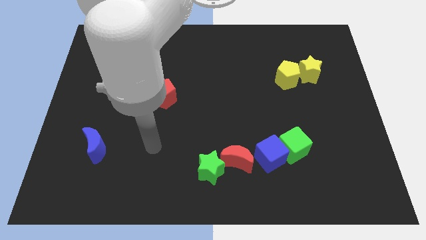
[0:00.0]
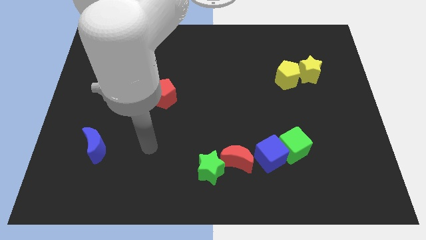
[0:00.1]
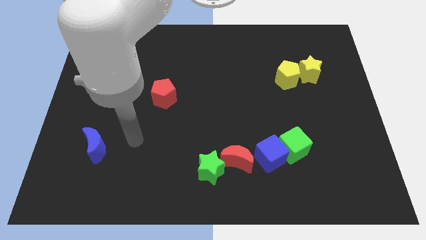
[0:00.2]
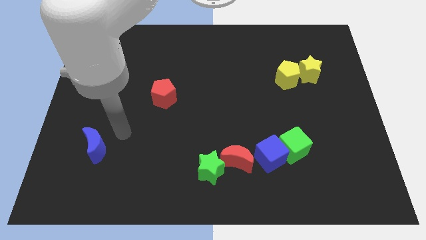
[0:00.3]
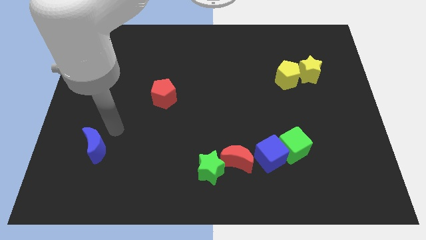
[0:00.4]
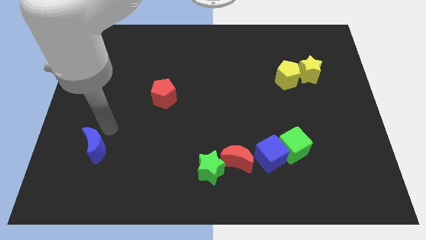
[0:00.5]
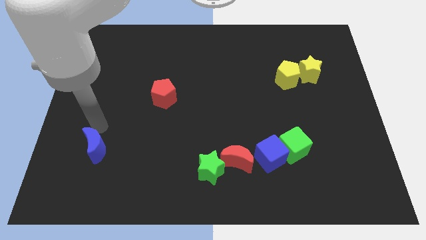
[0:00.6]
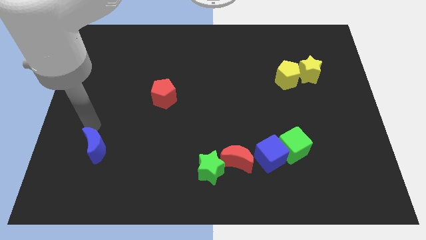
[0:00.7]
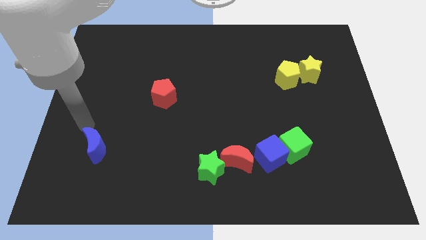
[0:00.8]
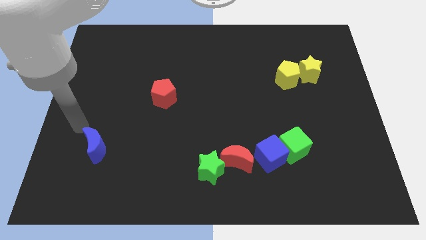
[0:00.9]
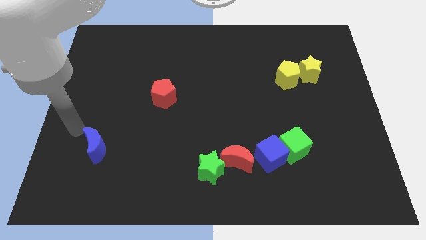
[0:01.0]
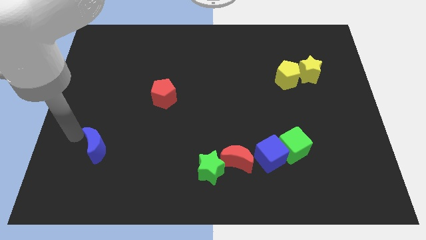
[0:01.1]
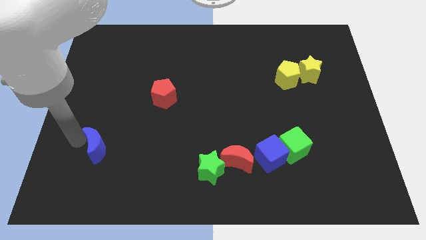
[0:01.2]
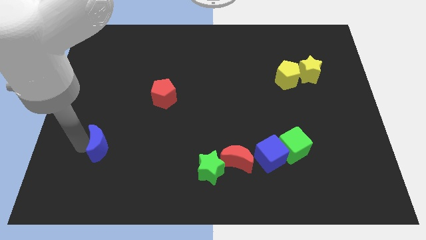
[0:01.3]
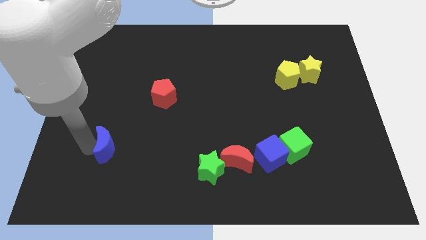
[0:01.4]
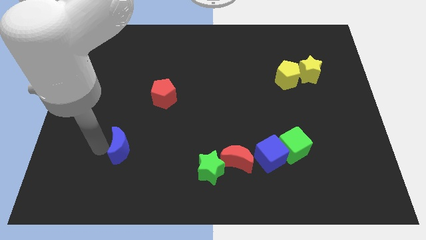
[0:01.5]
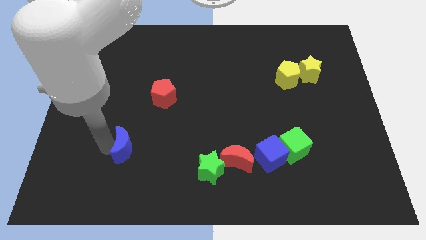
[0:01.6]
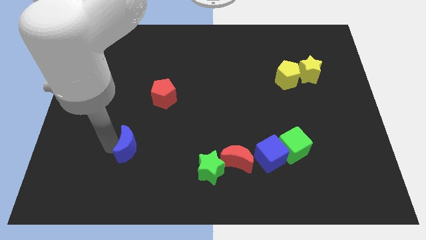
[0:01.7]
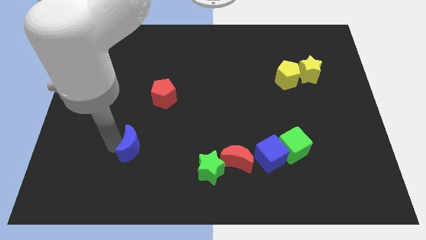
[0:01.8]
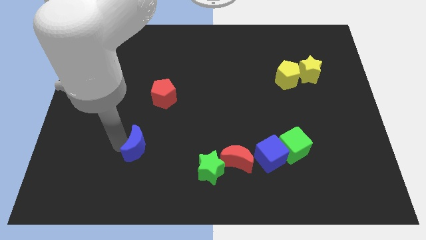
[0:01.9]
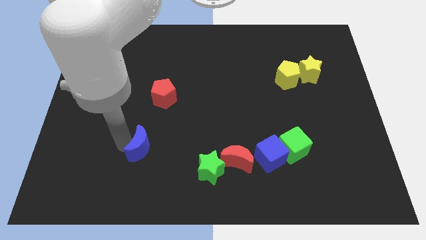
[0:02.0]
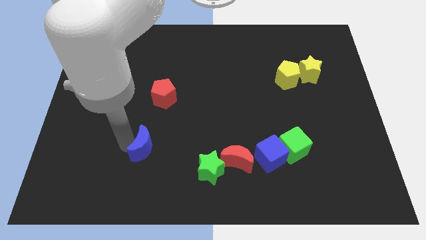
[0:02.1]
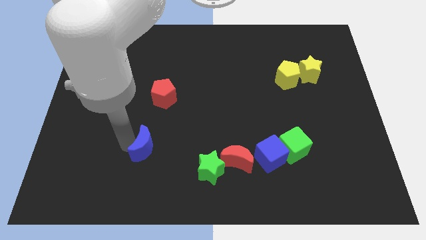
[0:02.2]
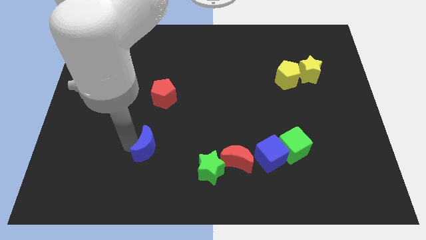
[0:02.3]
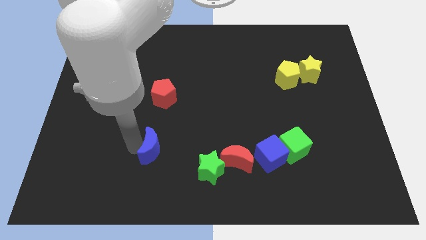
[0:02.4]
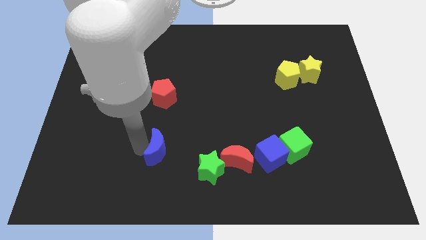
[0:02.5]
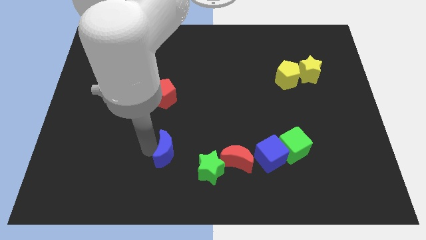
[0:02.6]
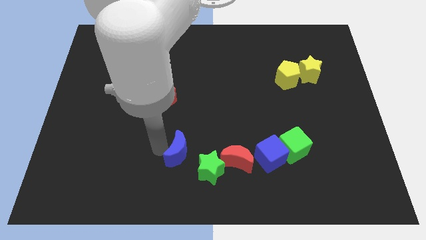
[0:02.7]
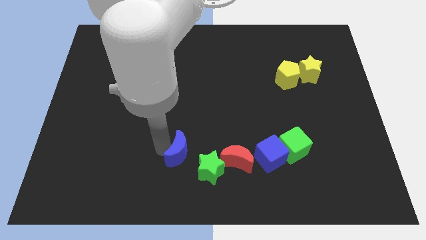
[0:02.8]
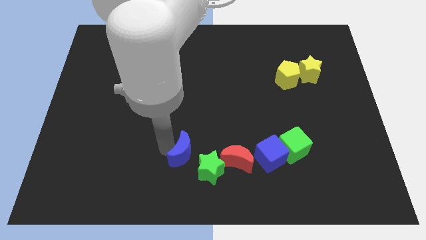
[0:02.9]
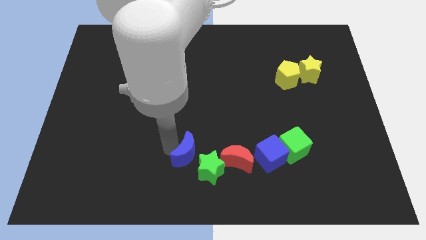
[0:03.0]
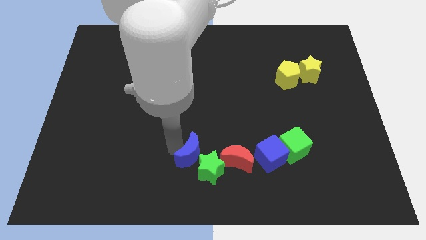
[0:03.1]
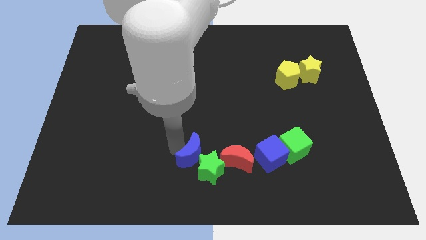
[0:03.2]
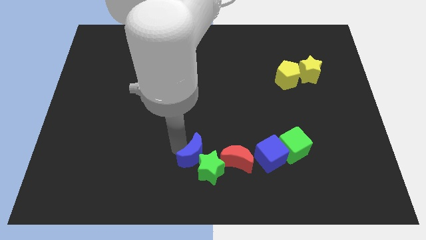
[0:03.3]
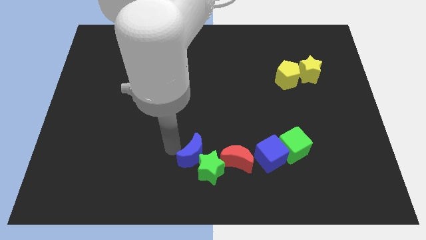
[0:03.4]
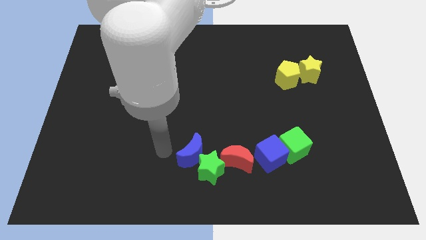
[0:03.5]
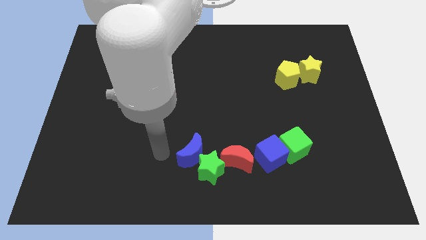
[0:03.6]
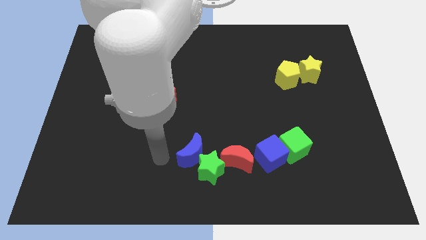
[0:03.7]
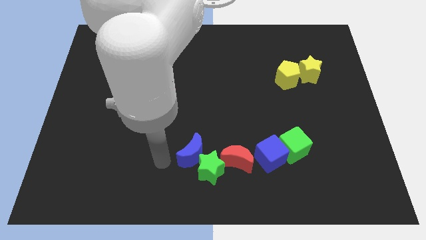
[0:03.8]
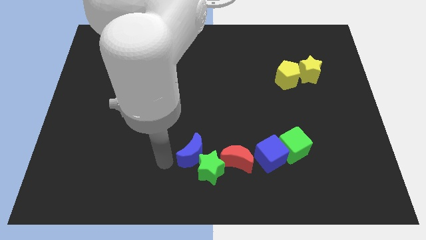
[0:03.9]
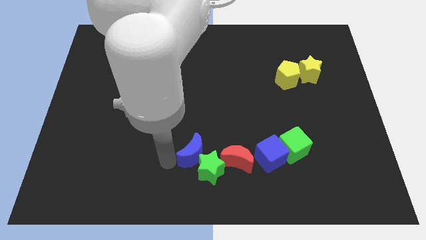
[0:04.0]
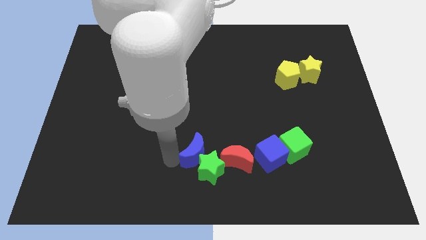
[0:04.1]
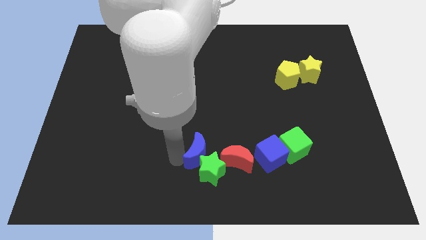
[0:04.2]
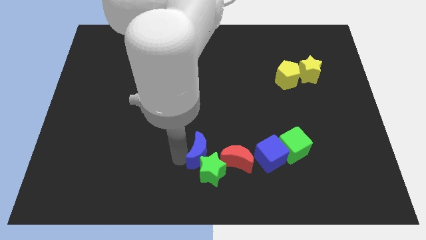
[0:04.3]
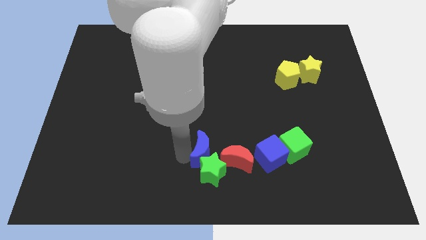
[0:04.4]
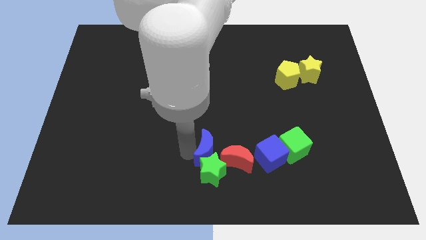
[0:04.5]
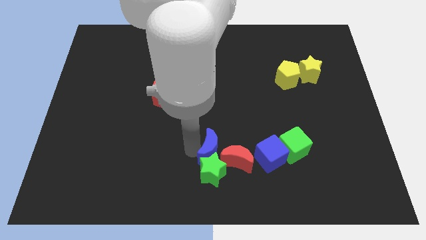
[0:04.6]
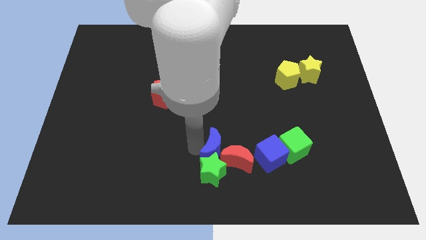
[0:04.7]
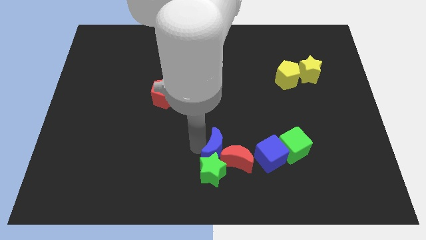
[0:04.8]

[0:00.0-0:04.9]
push the blue moon close to the red moon

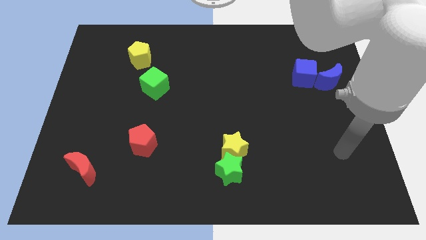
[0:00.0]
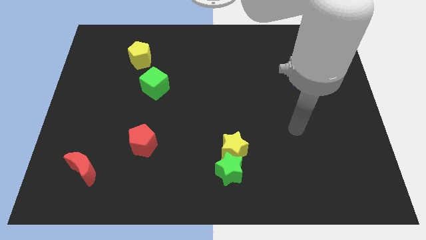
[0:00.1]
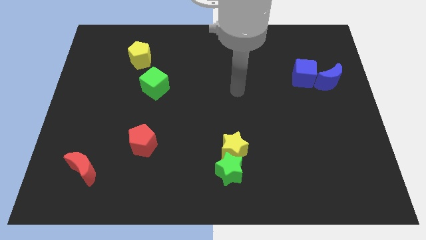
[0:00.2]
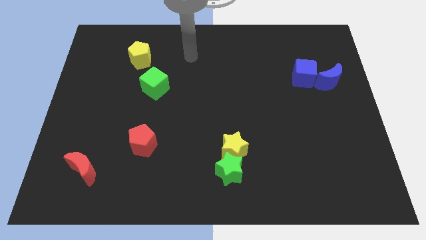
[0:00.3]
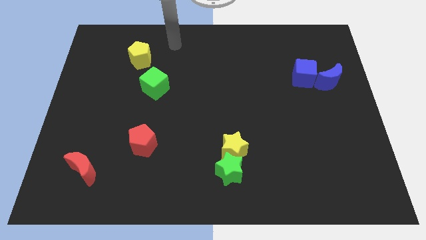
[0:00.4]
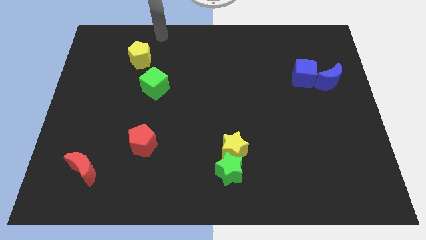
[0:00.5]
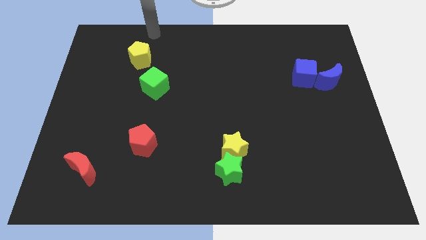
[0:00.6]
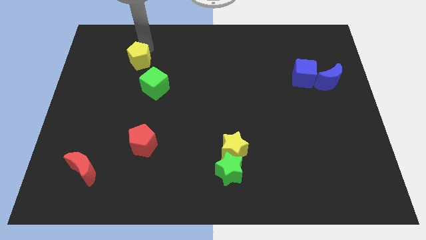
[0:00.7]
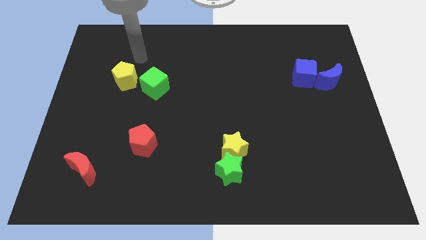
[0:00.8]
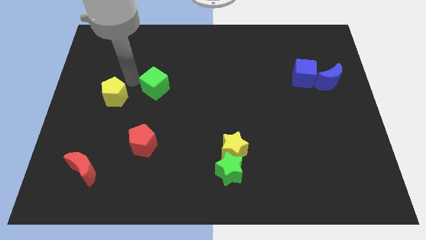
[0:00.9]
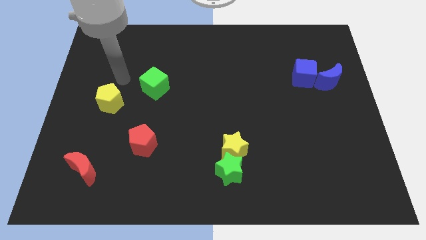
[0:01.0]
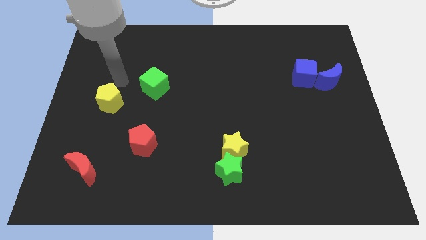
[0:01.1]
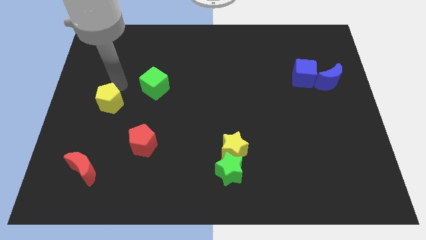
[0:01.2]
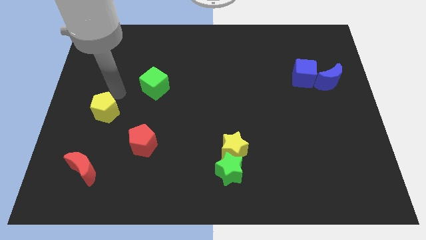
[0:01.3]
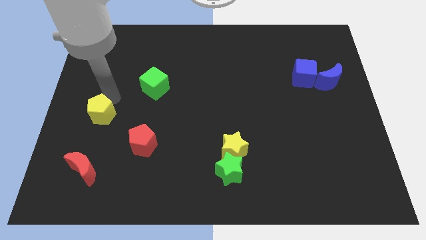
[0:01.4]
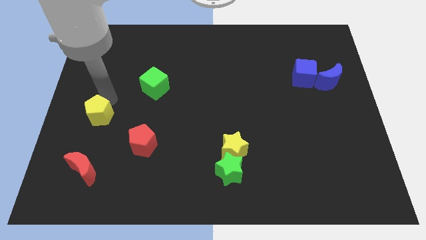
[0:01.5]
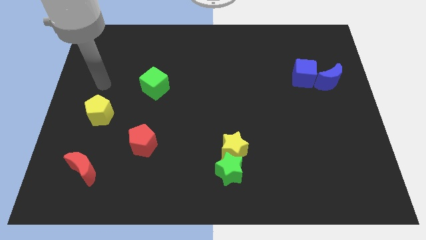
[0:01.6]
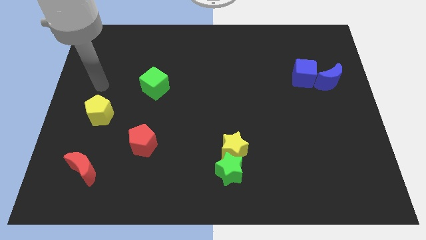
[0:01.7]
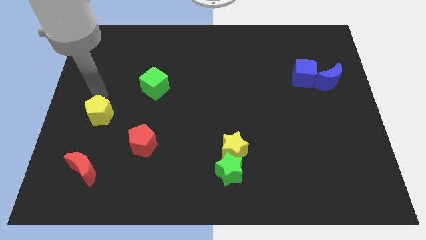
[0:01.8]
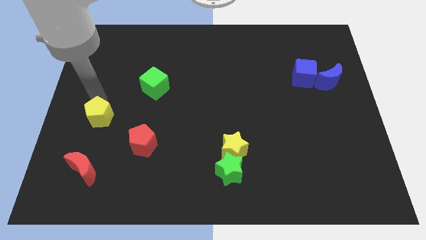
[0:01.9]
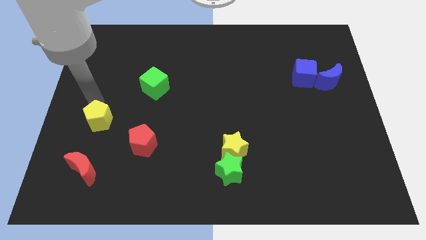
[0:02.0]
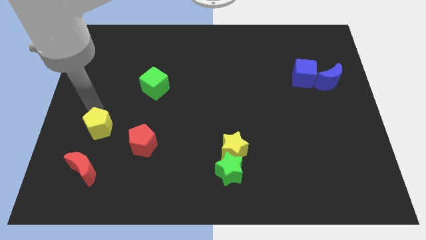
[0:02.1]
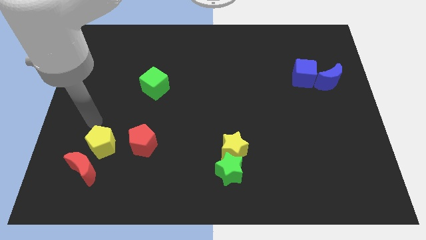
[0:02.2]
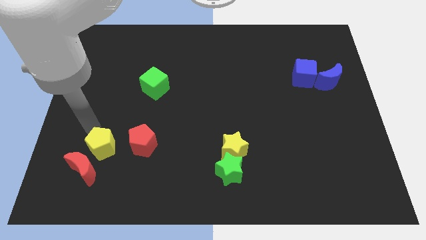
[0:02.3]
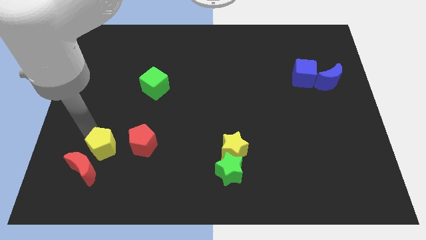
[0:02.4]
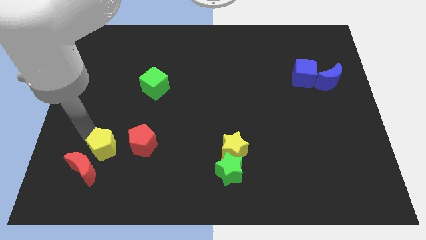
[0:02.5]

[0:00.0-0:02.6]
push the yellow pentagon next to the red moon

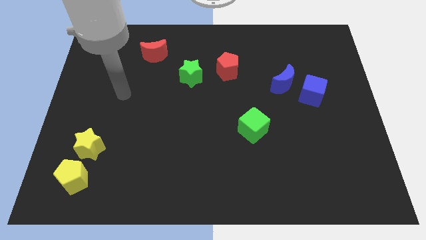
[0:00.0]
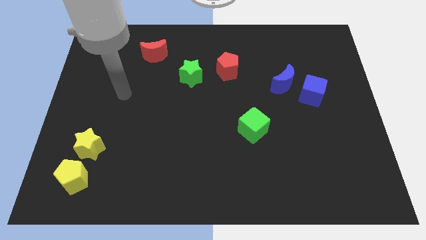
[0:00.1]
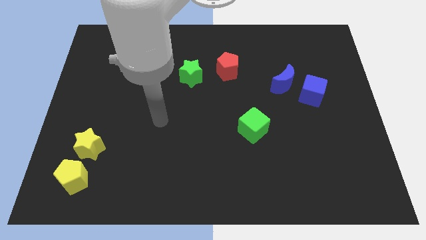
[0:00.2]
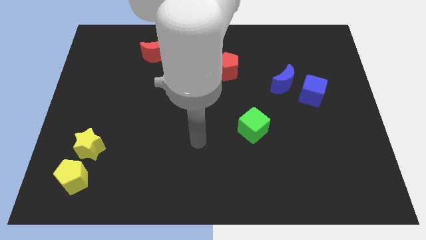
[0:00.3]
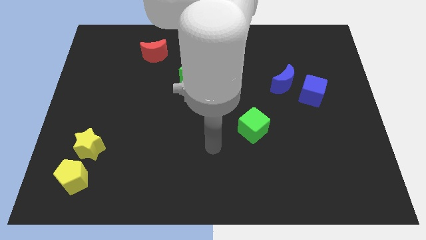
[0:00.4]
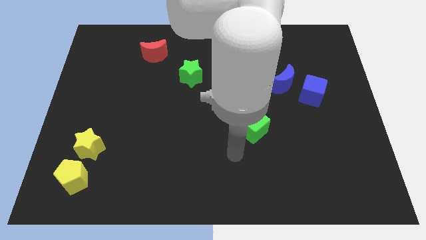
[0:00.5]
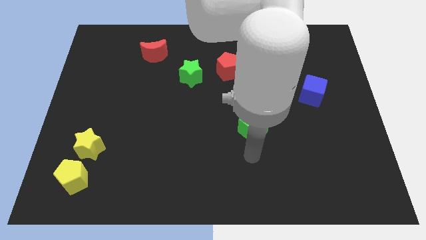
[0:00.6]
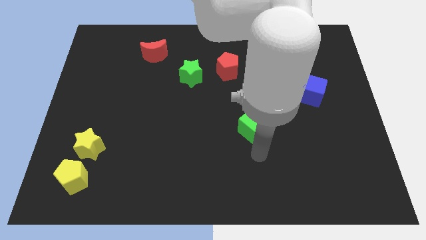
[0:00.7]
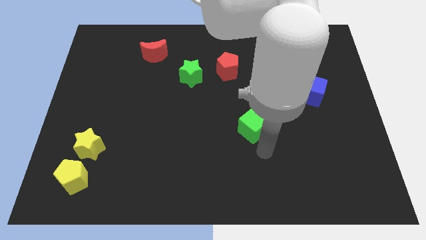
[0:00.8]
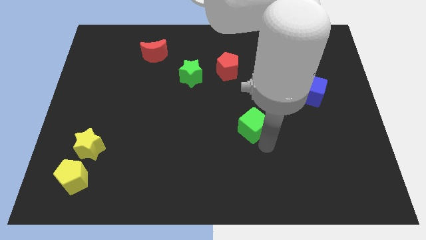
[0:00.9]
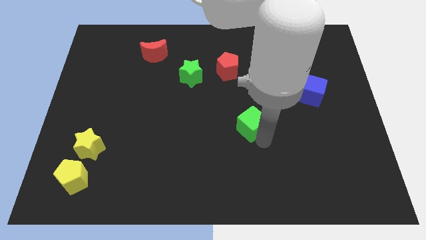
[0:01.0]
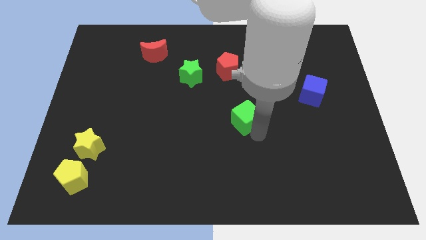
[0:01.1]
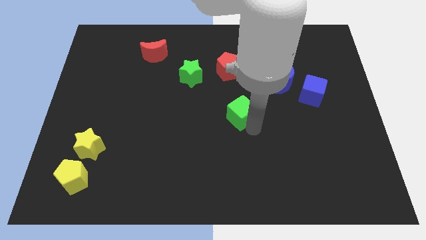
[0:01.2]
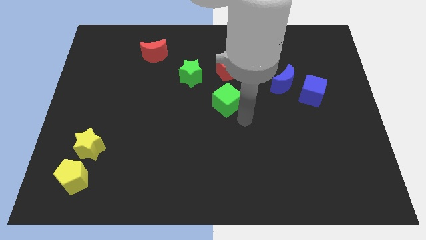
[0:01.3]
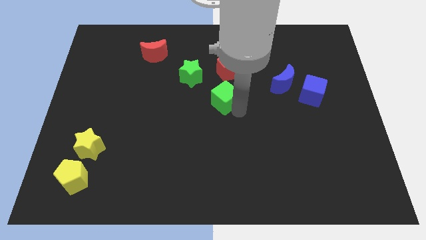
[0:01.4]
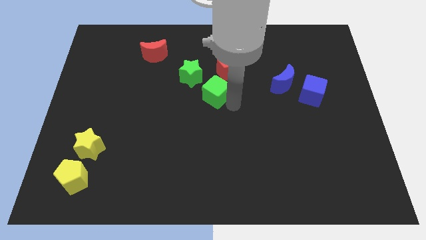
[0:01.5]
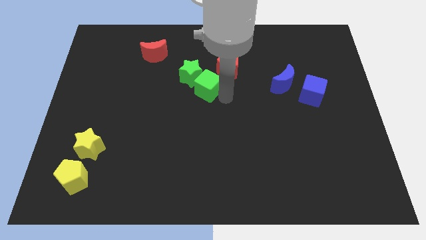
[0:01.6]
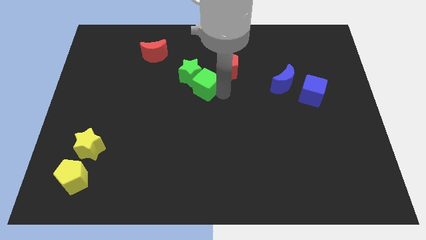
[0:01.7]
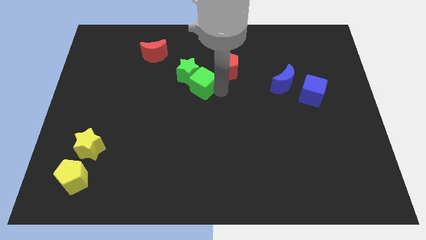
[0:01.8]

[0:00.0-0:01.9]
put the green cube next to the green star
